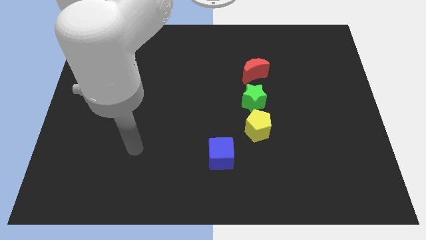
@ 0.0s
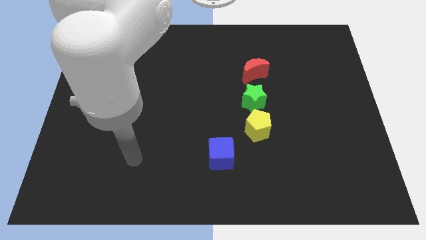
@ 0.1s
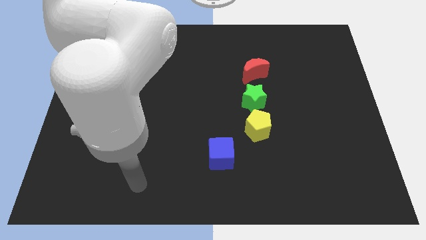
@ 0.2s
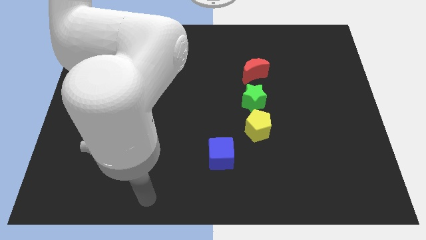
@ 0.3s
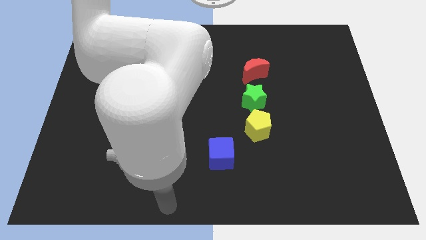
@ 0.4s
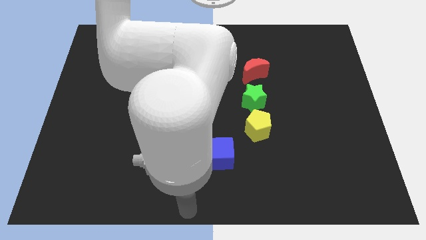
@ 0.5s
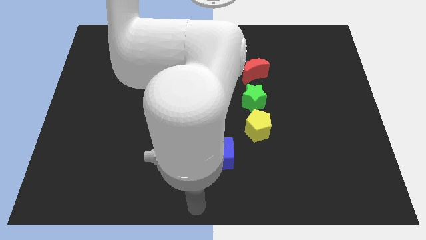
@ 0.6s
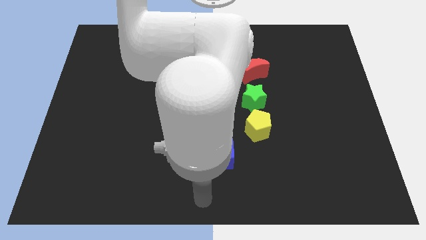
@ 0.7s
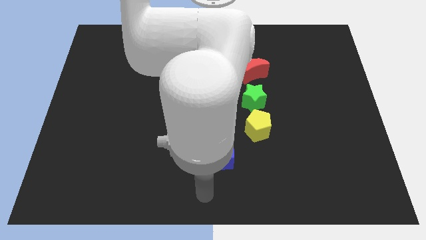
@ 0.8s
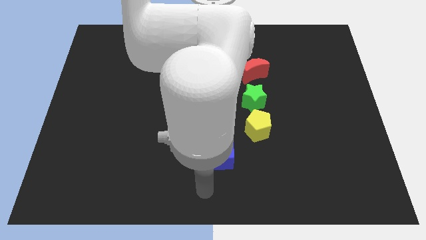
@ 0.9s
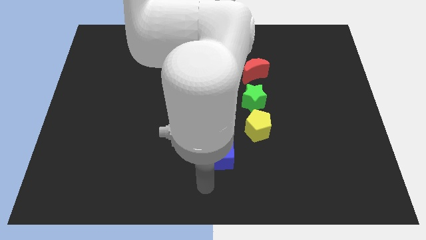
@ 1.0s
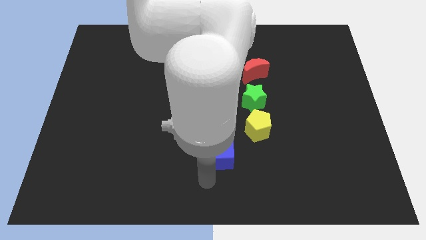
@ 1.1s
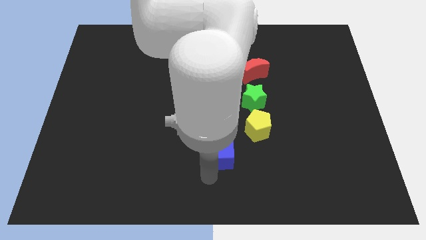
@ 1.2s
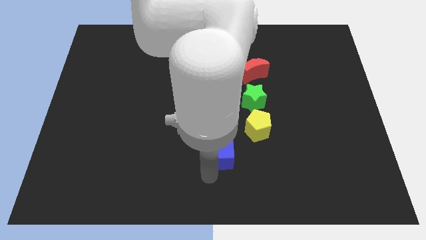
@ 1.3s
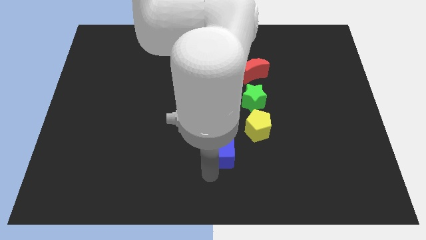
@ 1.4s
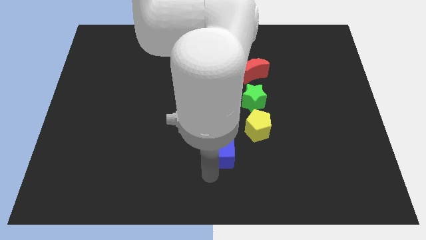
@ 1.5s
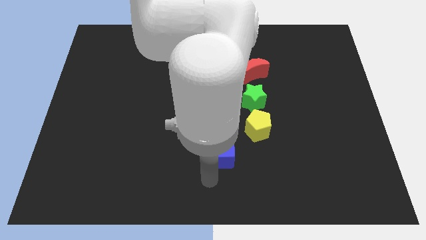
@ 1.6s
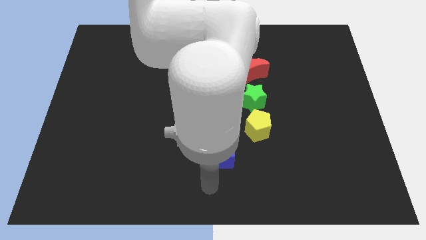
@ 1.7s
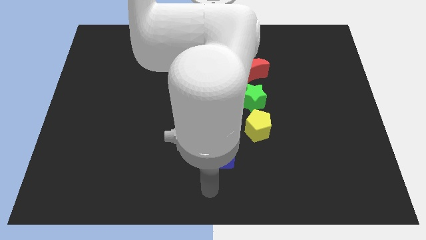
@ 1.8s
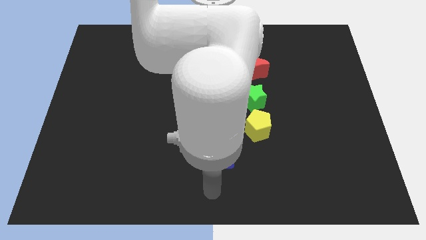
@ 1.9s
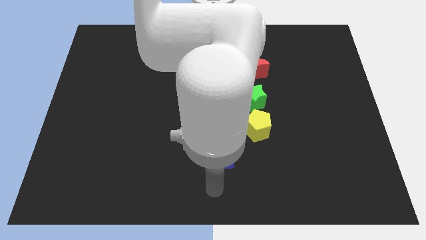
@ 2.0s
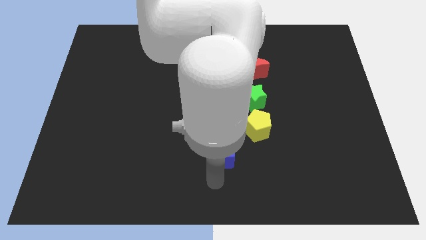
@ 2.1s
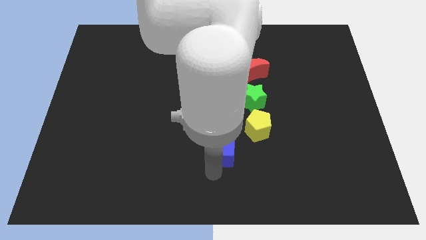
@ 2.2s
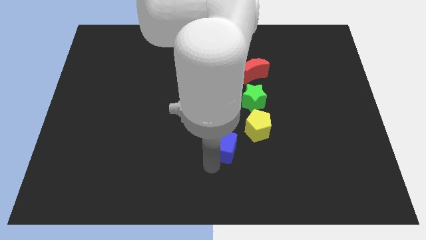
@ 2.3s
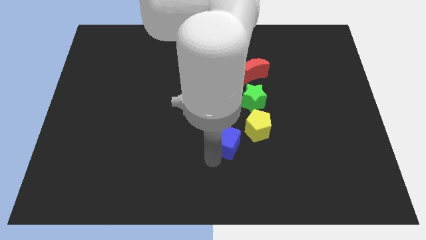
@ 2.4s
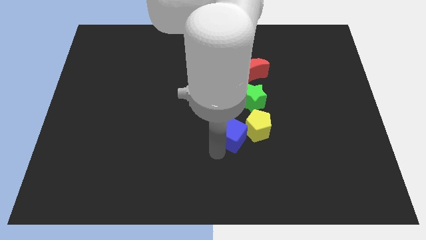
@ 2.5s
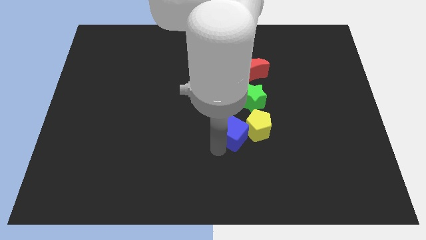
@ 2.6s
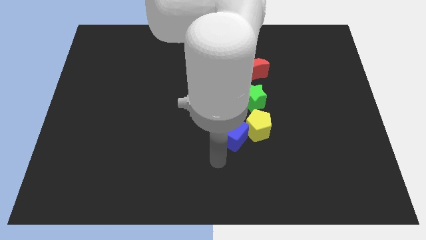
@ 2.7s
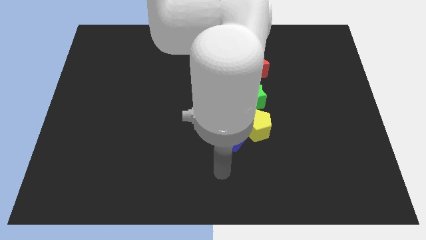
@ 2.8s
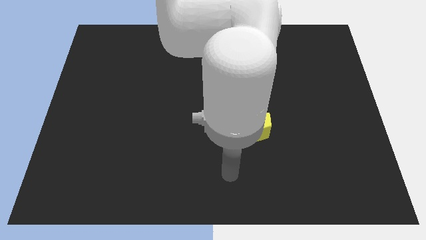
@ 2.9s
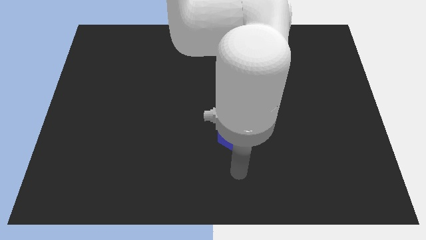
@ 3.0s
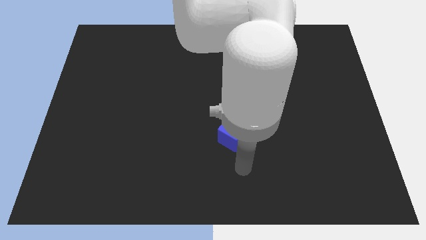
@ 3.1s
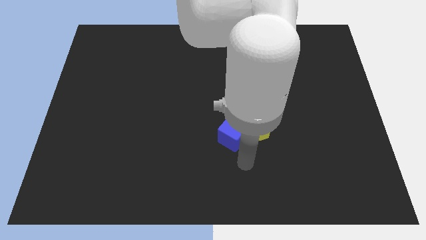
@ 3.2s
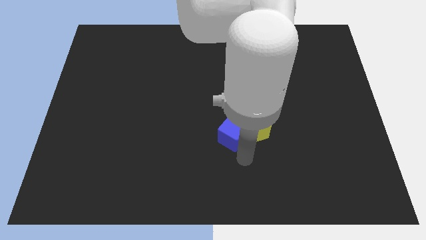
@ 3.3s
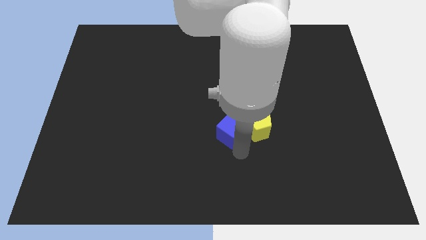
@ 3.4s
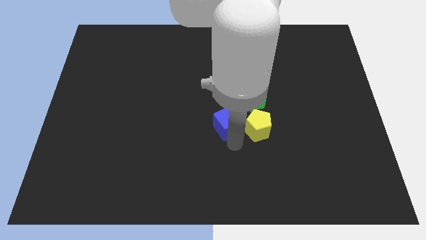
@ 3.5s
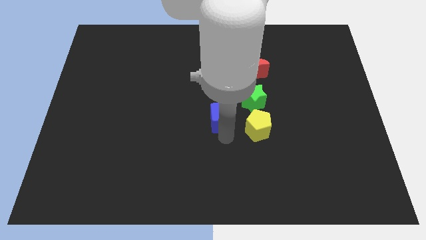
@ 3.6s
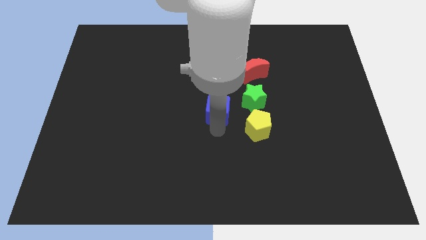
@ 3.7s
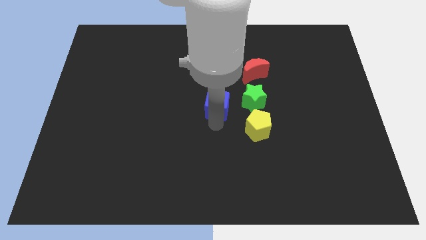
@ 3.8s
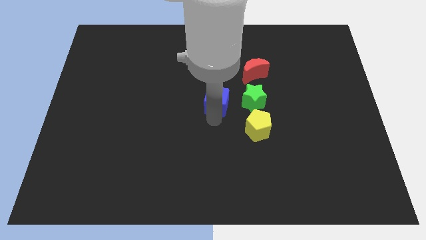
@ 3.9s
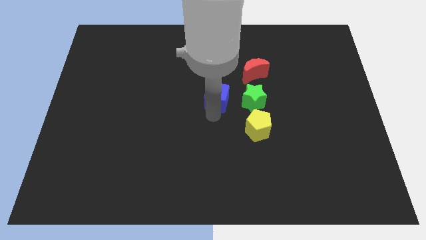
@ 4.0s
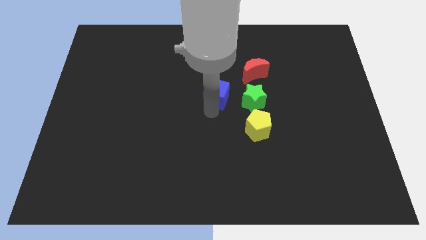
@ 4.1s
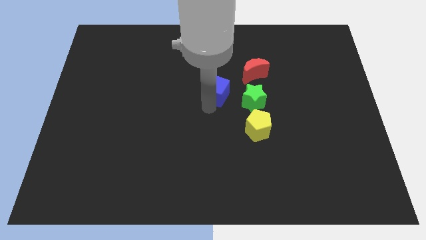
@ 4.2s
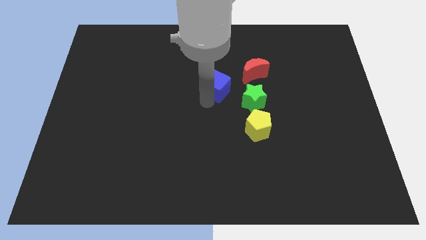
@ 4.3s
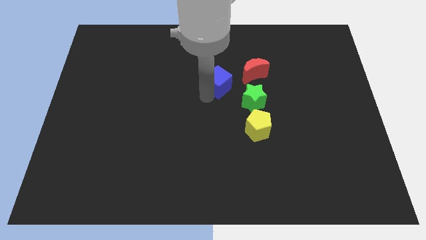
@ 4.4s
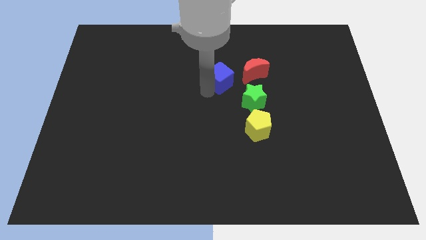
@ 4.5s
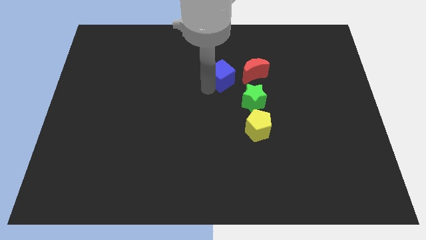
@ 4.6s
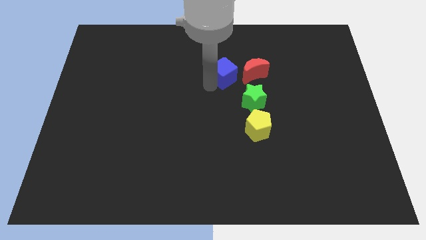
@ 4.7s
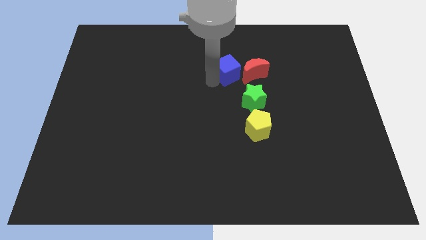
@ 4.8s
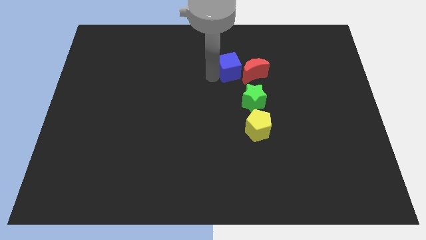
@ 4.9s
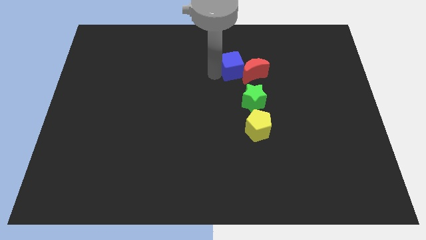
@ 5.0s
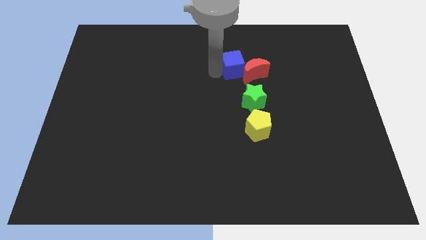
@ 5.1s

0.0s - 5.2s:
slide the blue cube towards the moon

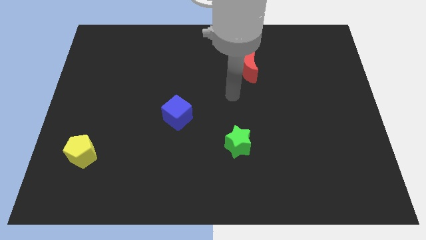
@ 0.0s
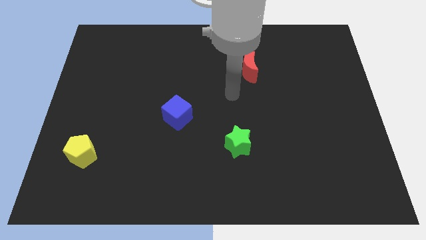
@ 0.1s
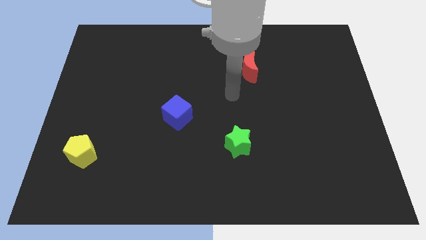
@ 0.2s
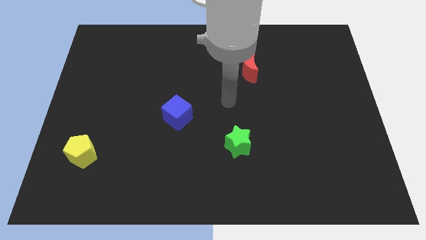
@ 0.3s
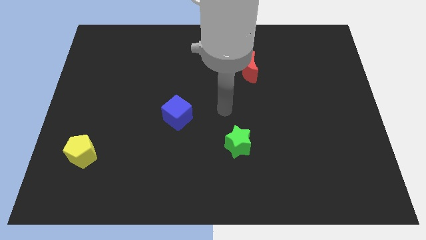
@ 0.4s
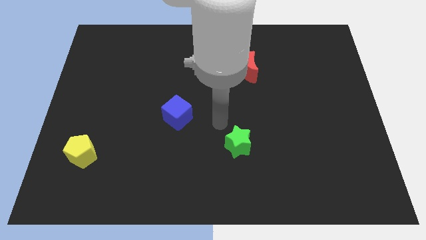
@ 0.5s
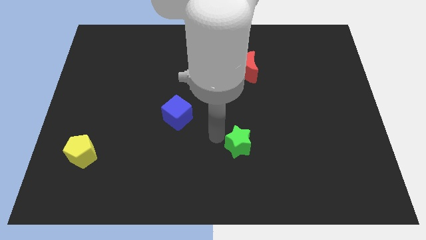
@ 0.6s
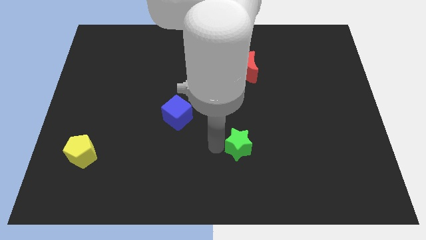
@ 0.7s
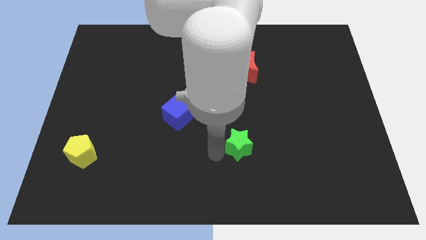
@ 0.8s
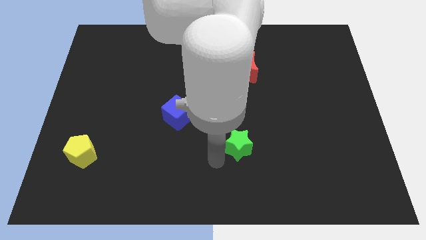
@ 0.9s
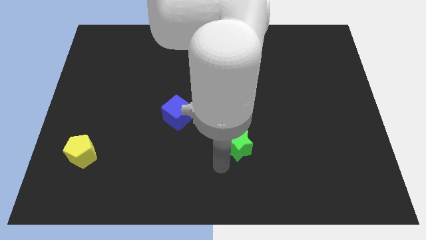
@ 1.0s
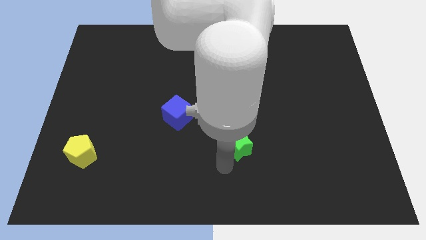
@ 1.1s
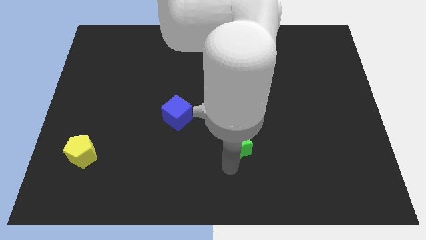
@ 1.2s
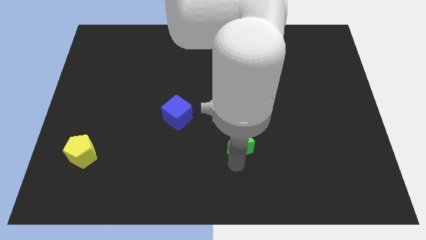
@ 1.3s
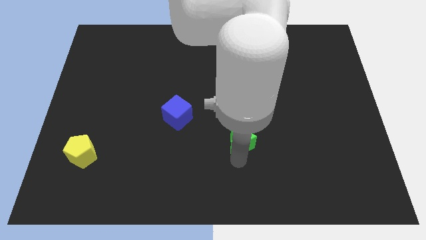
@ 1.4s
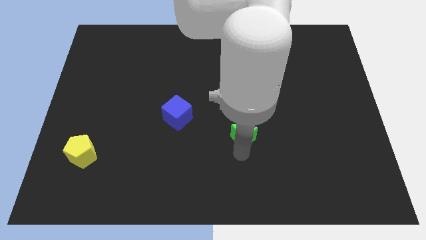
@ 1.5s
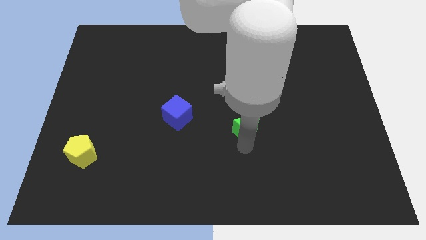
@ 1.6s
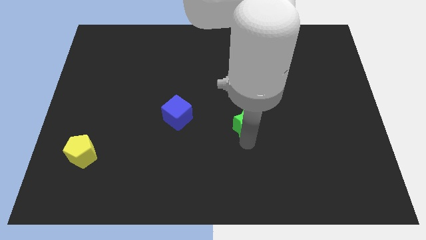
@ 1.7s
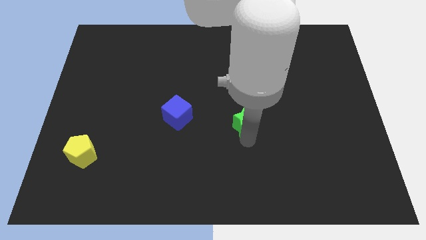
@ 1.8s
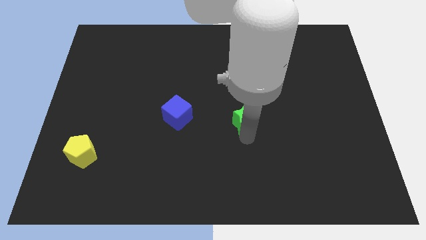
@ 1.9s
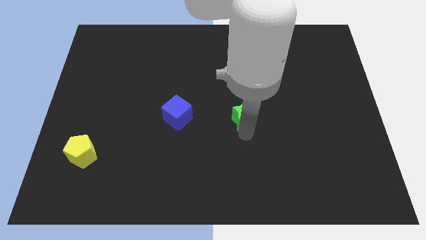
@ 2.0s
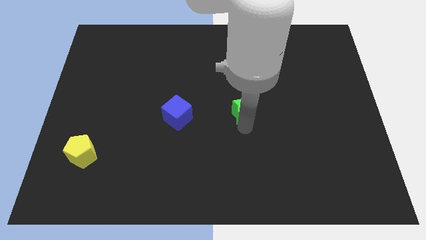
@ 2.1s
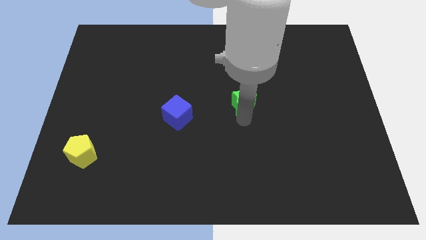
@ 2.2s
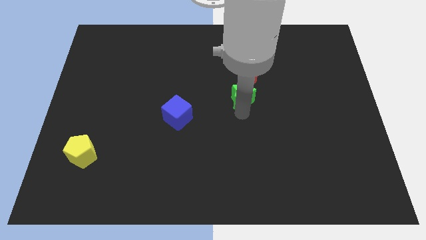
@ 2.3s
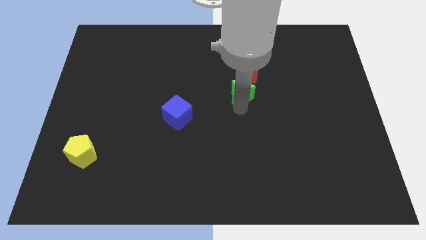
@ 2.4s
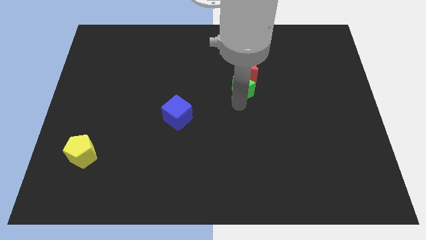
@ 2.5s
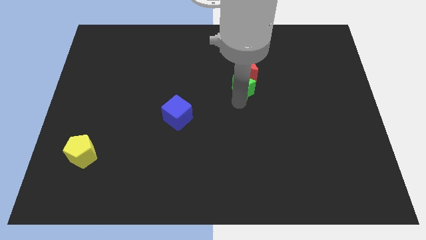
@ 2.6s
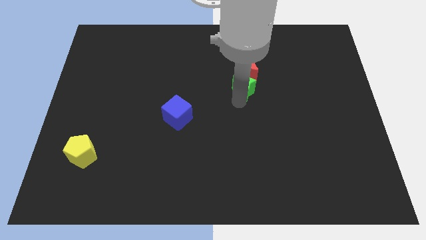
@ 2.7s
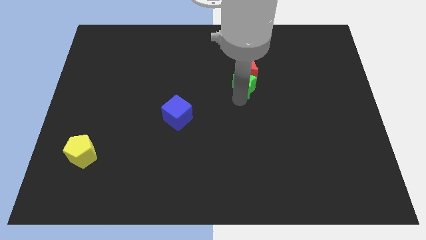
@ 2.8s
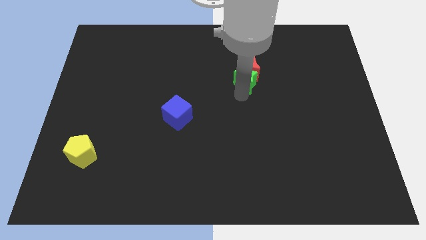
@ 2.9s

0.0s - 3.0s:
put the star to the red moon

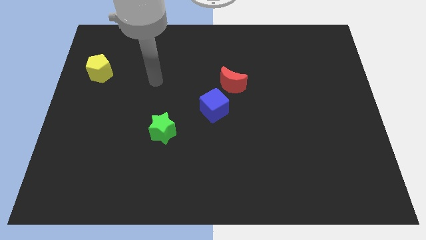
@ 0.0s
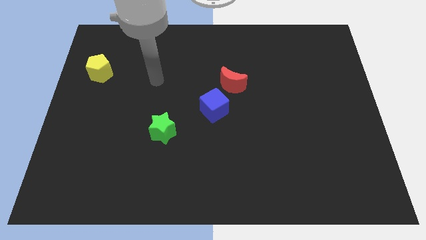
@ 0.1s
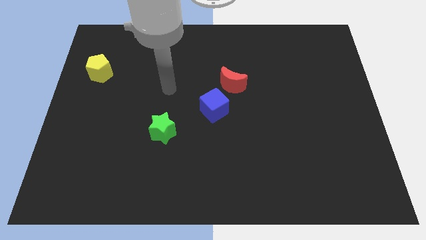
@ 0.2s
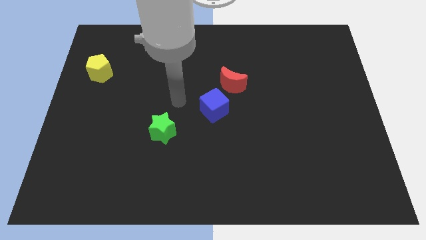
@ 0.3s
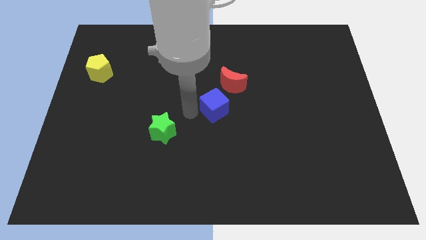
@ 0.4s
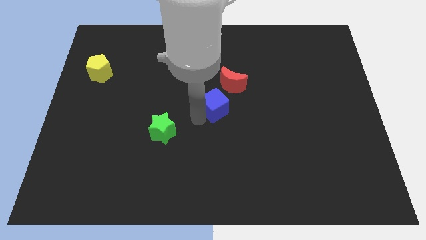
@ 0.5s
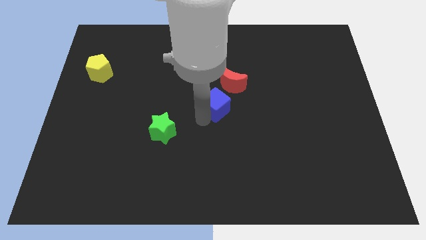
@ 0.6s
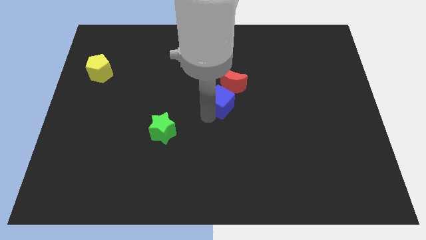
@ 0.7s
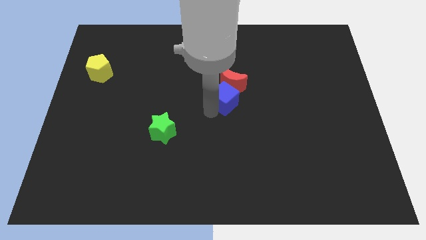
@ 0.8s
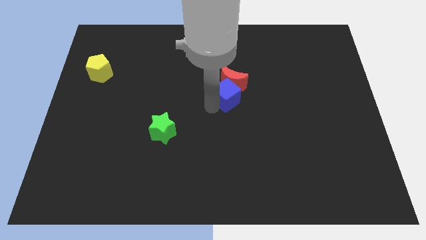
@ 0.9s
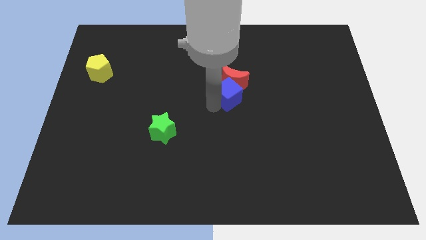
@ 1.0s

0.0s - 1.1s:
push the blue block towards the red block
